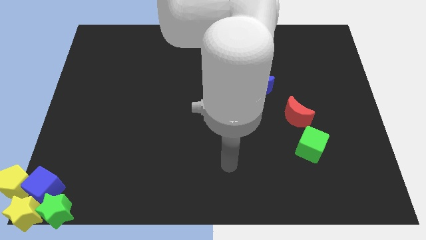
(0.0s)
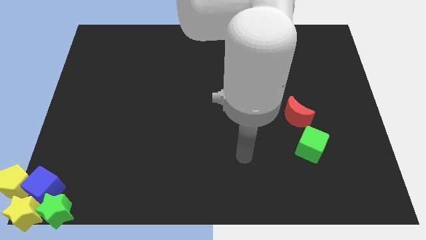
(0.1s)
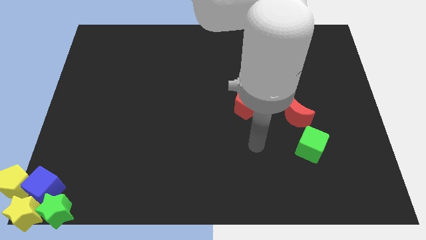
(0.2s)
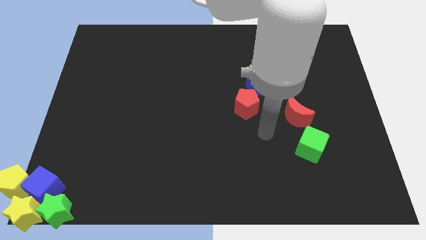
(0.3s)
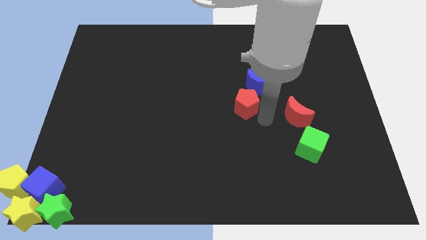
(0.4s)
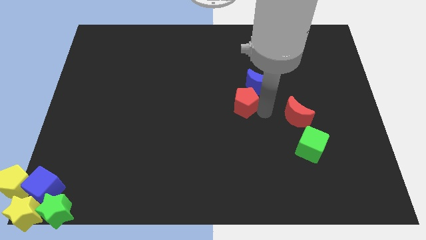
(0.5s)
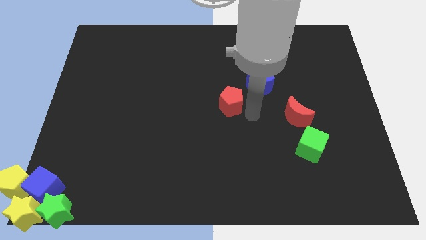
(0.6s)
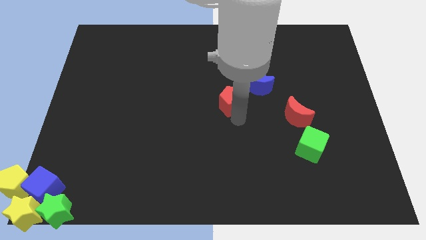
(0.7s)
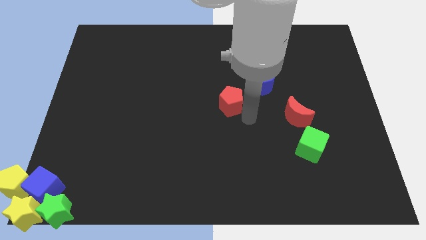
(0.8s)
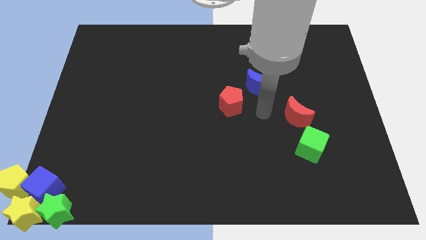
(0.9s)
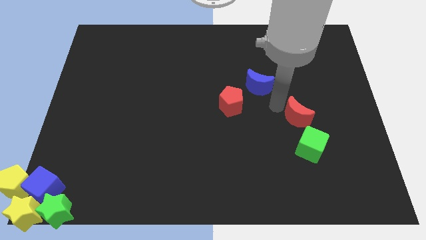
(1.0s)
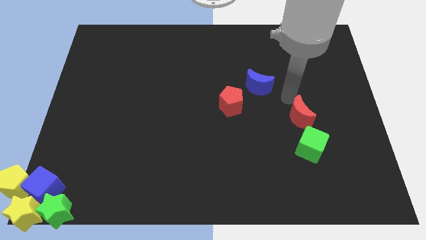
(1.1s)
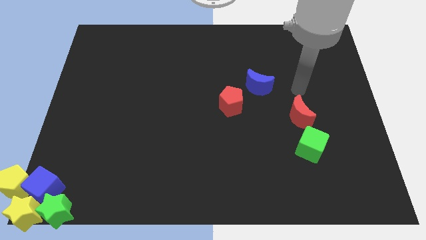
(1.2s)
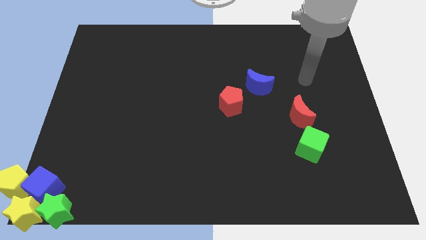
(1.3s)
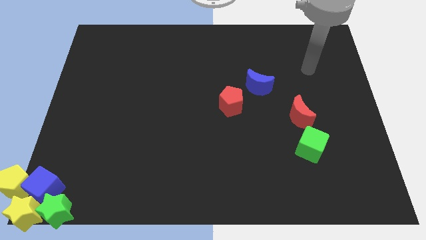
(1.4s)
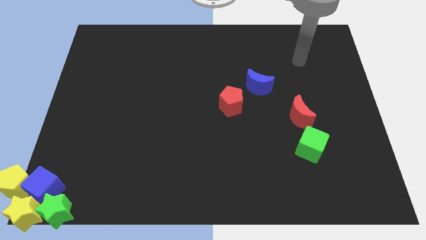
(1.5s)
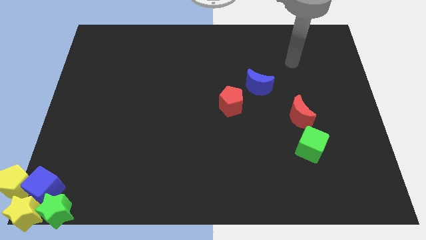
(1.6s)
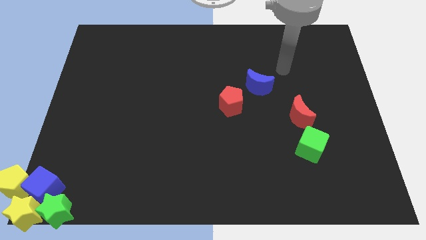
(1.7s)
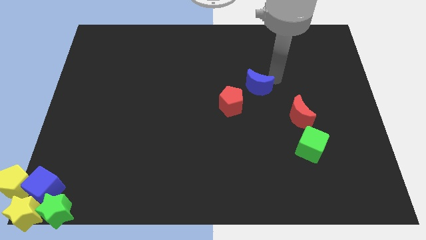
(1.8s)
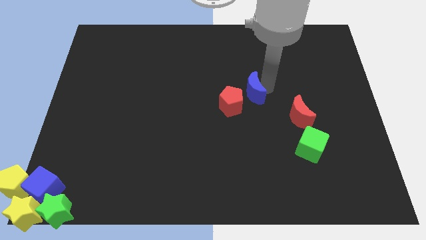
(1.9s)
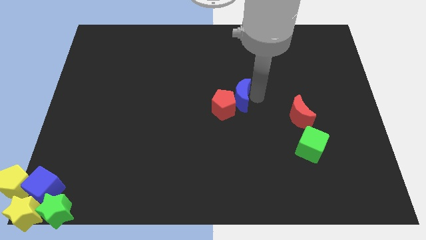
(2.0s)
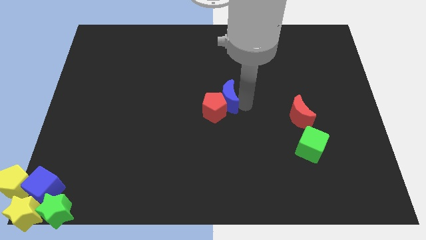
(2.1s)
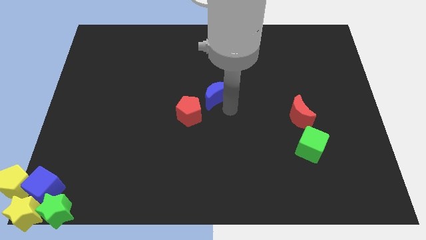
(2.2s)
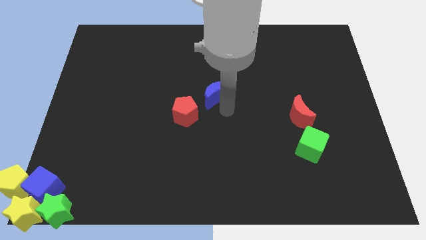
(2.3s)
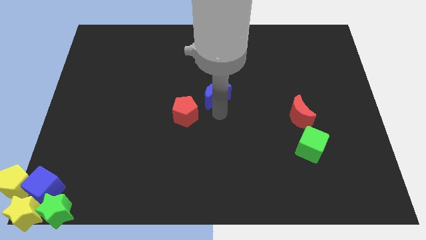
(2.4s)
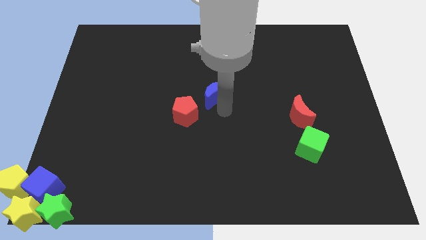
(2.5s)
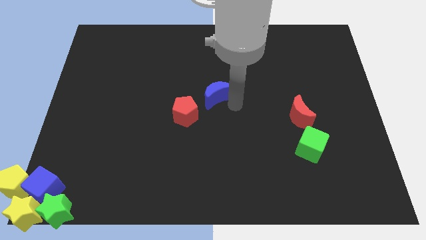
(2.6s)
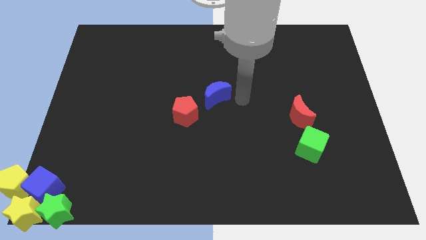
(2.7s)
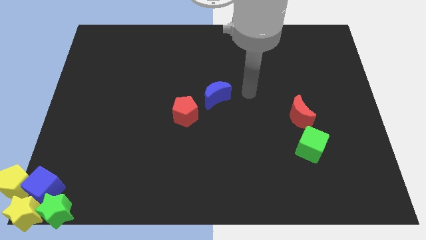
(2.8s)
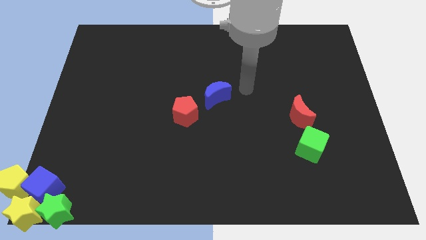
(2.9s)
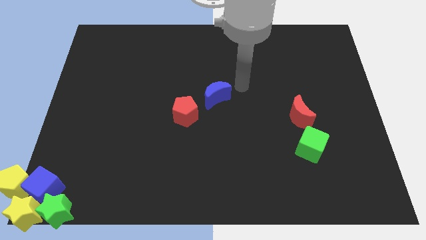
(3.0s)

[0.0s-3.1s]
place the blue moon at the center of the board

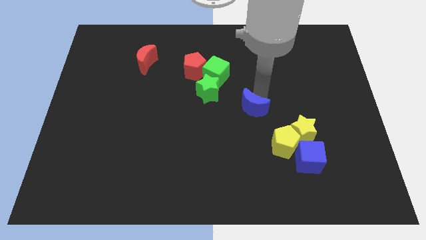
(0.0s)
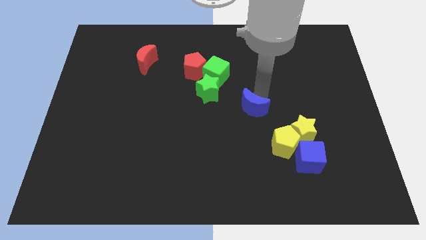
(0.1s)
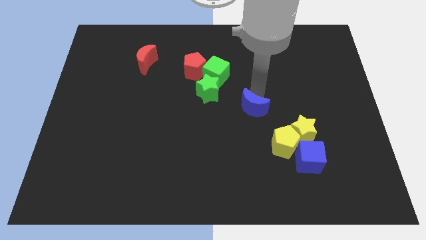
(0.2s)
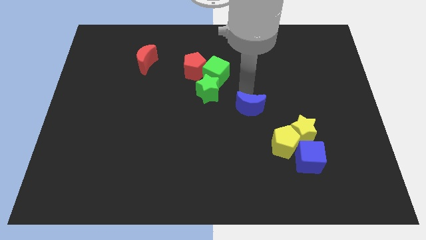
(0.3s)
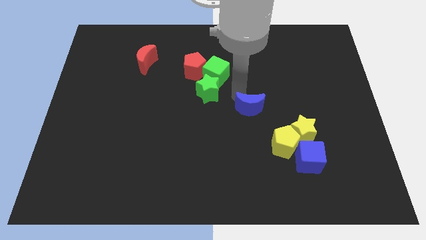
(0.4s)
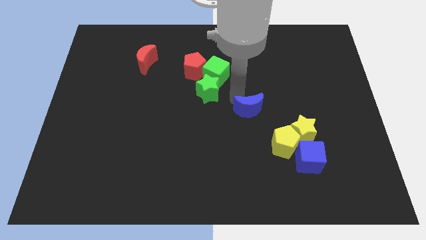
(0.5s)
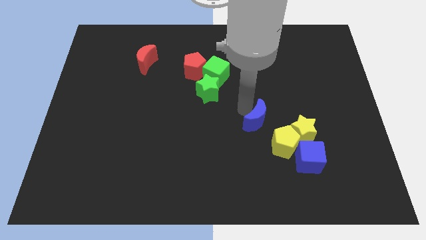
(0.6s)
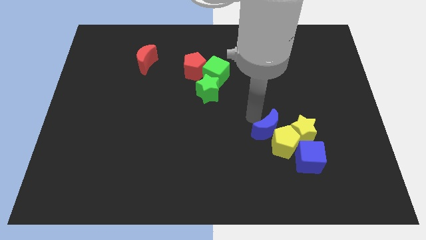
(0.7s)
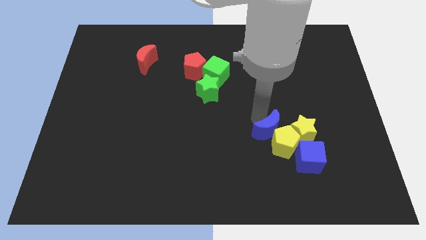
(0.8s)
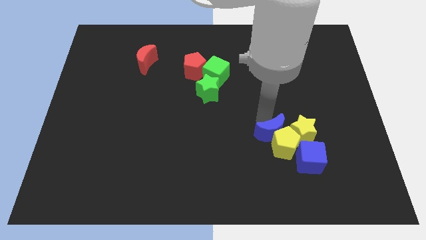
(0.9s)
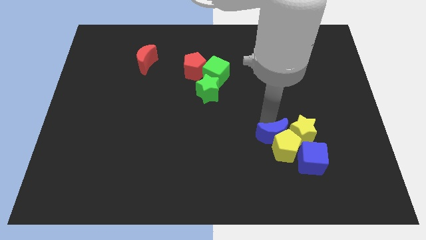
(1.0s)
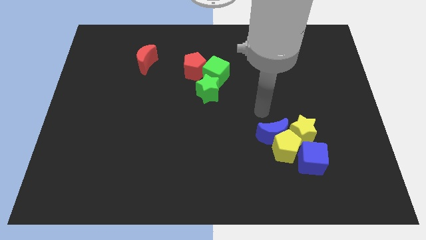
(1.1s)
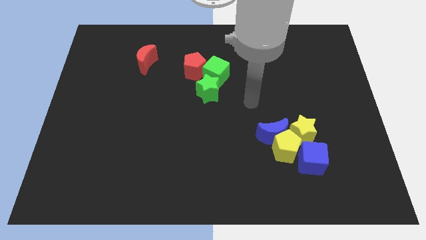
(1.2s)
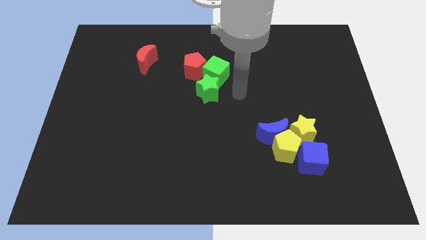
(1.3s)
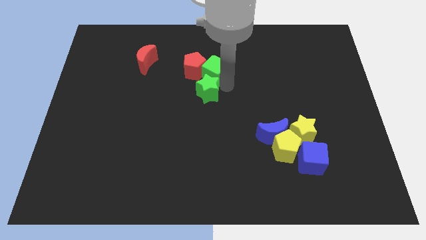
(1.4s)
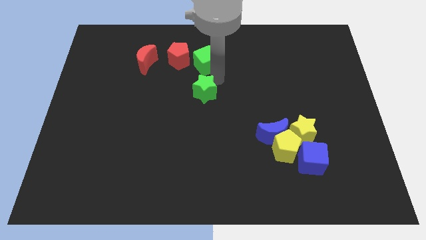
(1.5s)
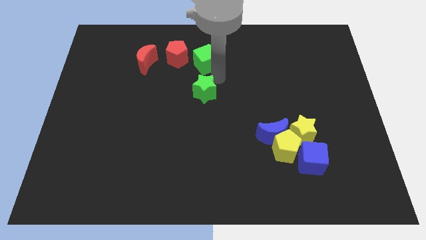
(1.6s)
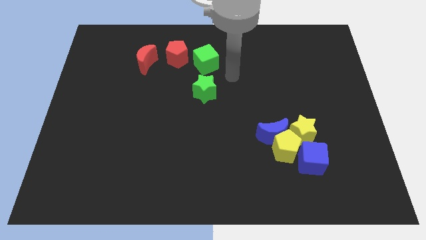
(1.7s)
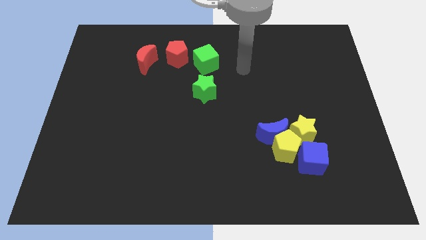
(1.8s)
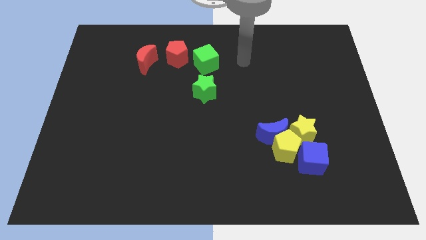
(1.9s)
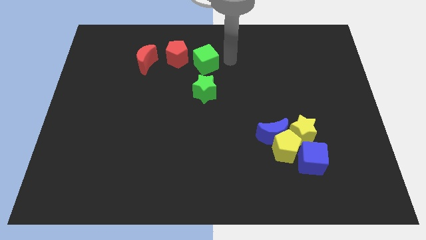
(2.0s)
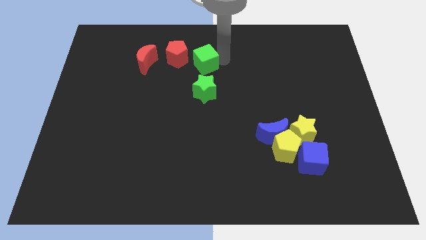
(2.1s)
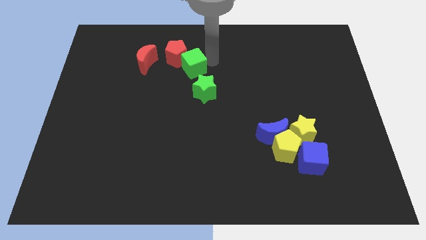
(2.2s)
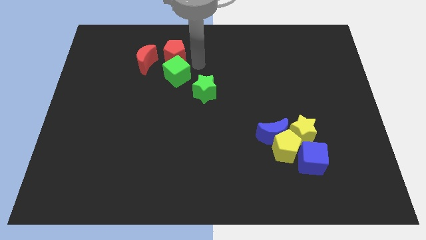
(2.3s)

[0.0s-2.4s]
place green cube below red pentagon

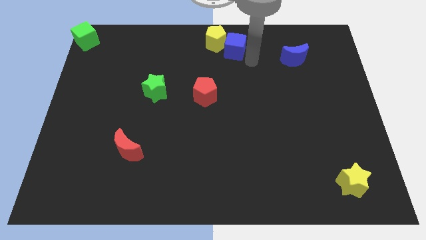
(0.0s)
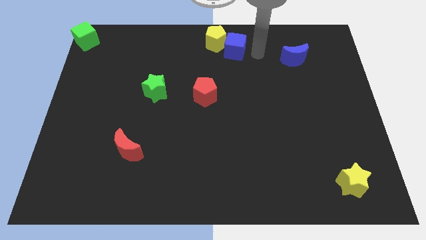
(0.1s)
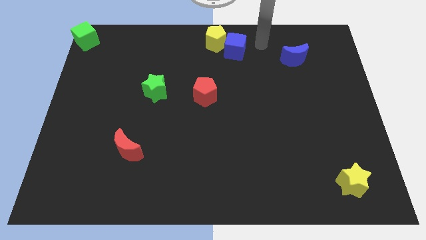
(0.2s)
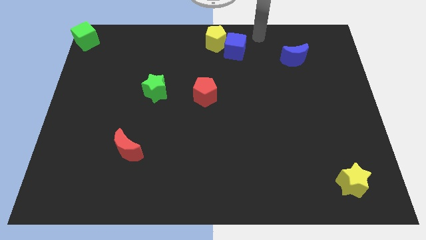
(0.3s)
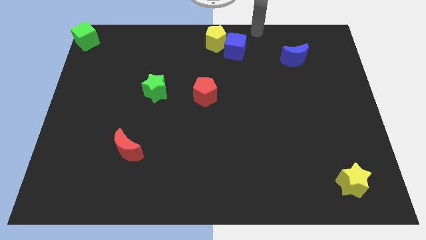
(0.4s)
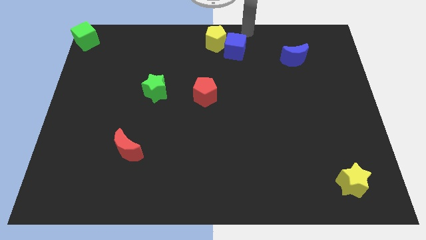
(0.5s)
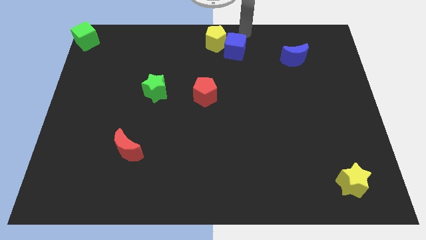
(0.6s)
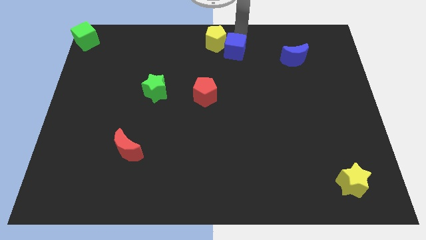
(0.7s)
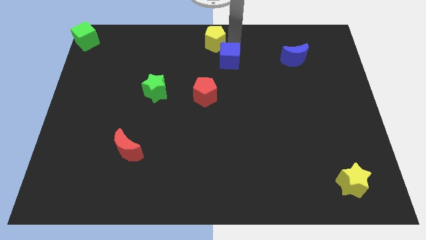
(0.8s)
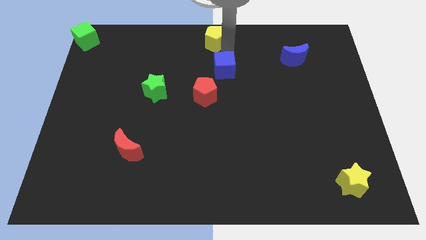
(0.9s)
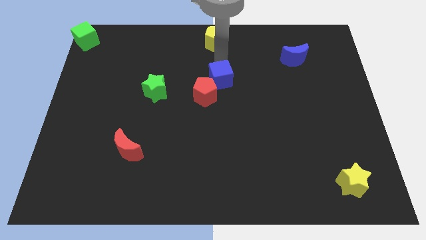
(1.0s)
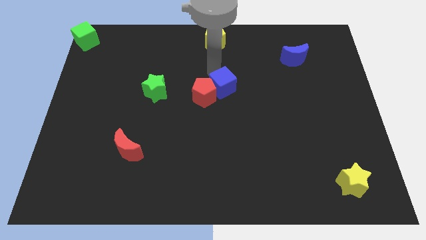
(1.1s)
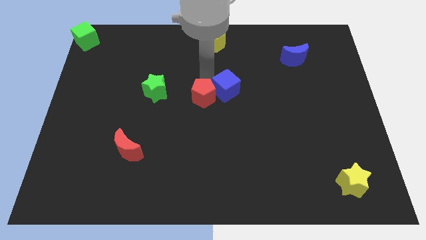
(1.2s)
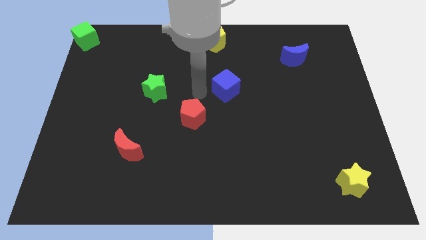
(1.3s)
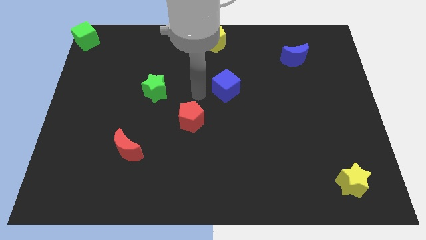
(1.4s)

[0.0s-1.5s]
move the blue cube away from the yellow pentagon

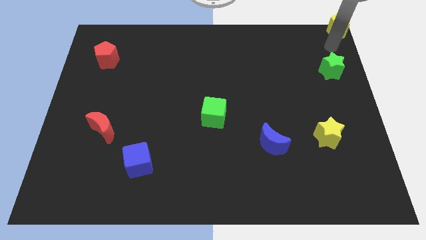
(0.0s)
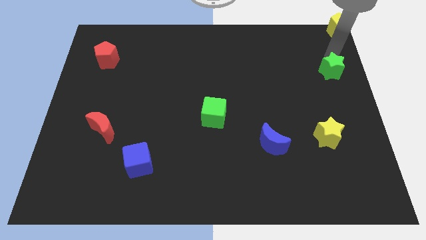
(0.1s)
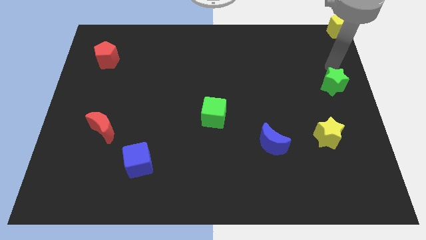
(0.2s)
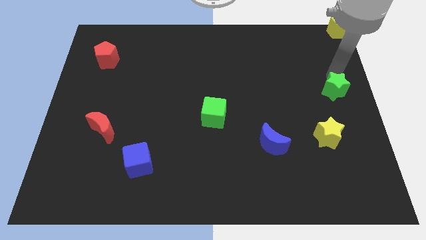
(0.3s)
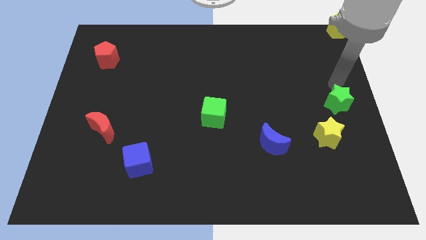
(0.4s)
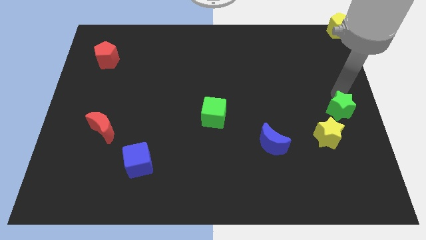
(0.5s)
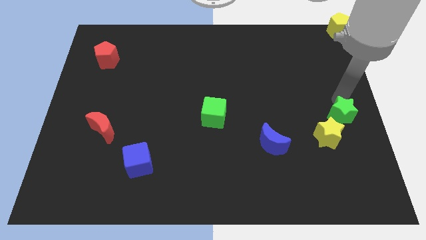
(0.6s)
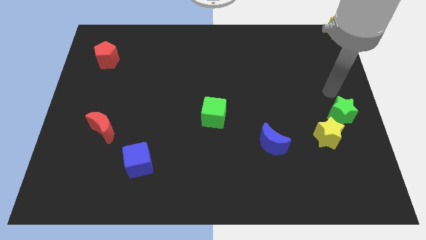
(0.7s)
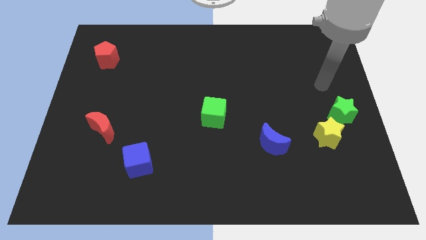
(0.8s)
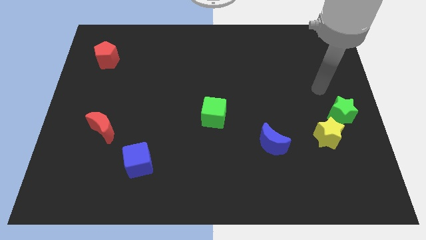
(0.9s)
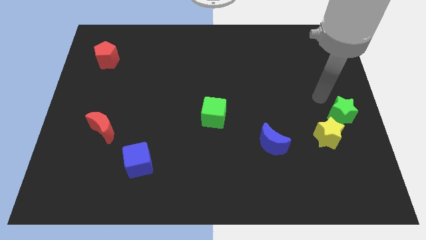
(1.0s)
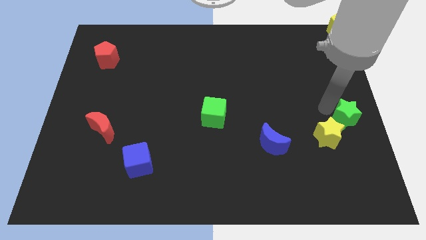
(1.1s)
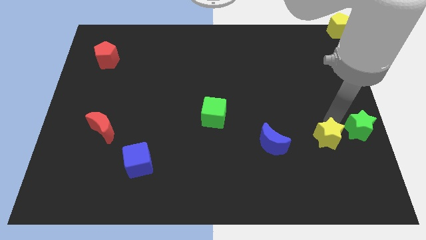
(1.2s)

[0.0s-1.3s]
place the green star to the top right of yellow star

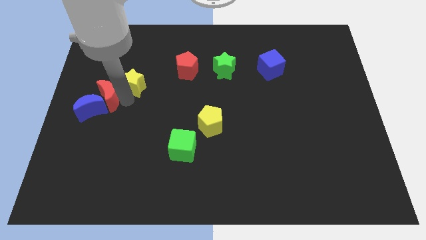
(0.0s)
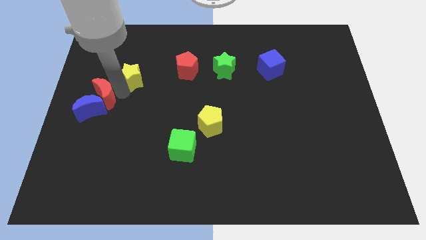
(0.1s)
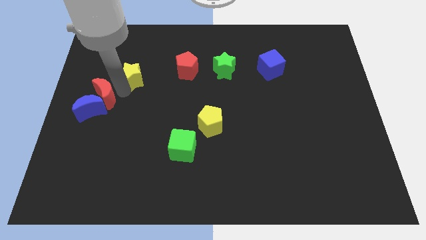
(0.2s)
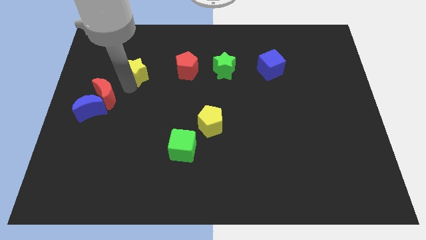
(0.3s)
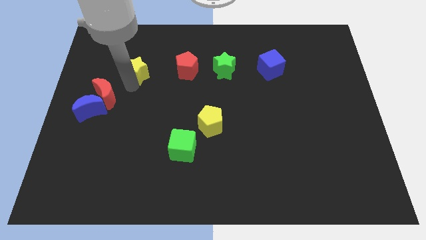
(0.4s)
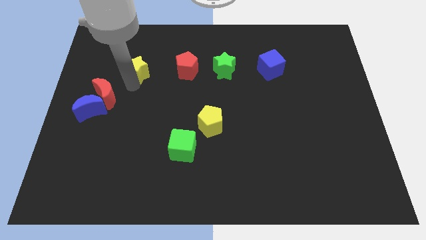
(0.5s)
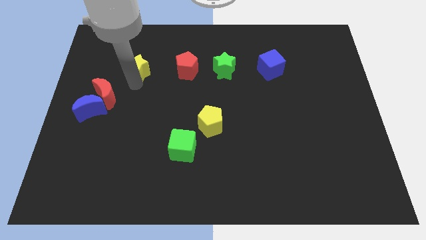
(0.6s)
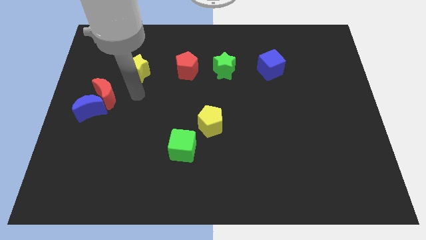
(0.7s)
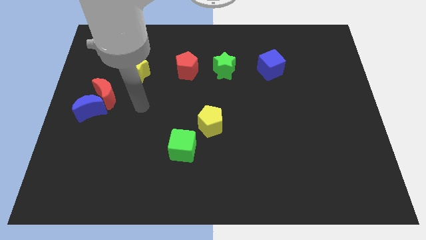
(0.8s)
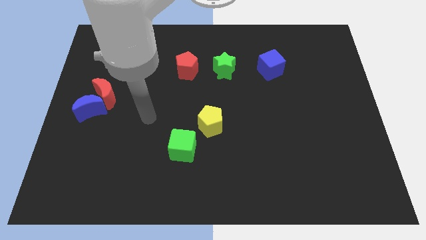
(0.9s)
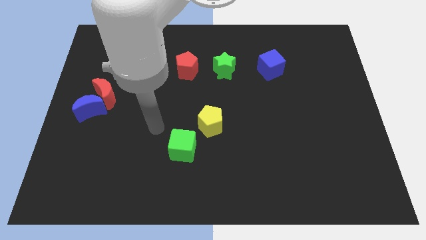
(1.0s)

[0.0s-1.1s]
move yellow star apart from red moon
